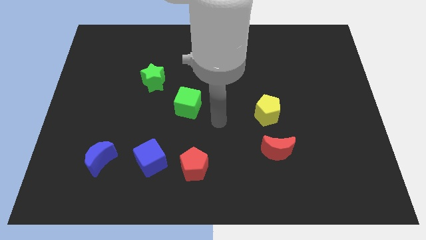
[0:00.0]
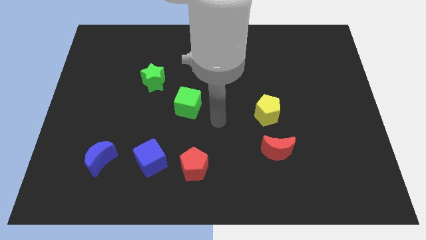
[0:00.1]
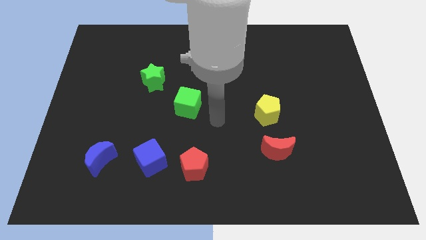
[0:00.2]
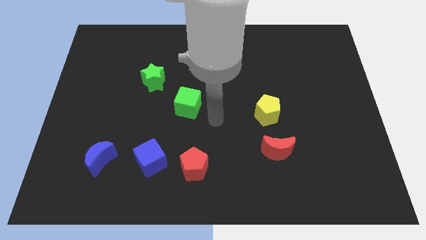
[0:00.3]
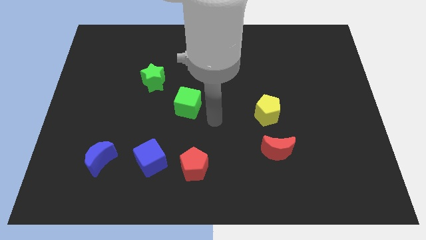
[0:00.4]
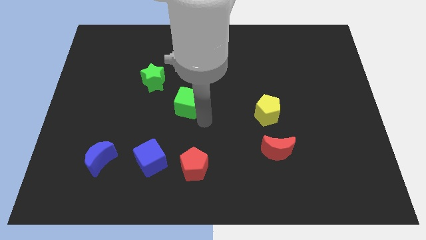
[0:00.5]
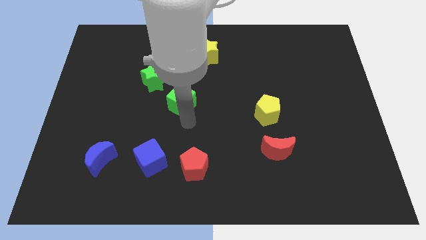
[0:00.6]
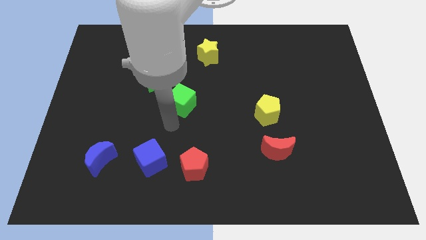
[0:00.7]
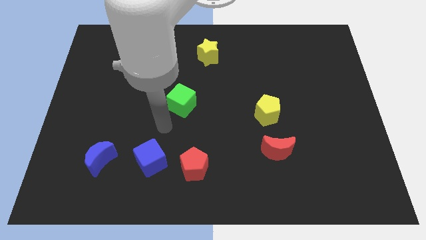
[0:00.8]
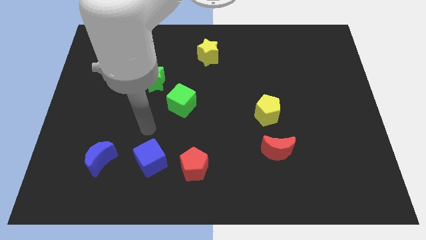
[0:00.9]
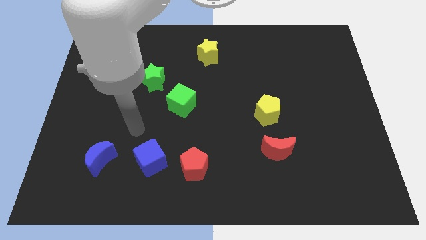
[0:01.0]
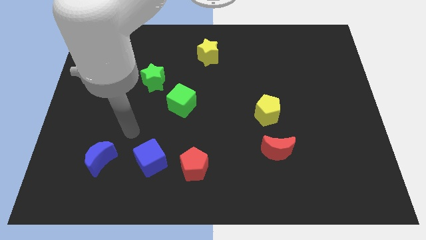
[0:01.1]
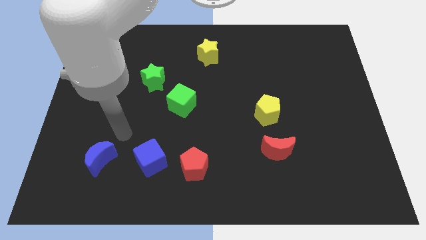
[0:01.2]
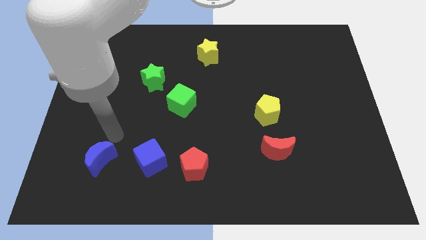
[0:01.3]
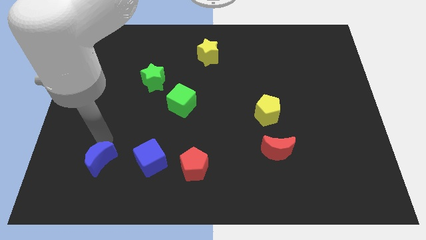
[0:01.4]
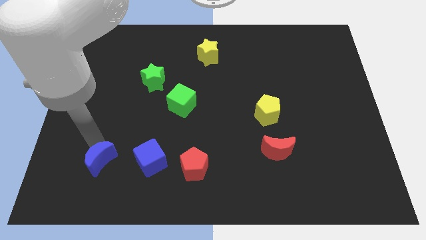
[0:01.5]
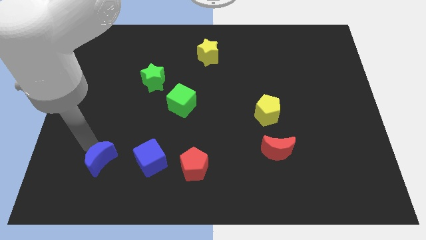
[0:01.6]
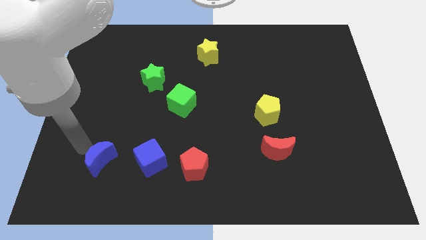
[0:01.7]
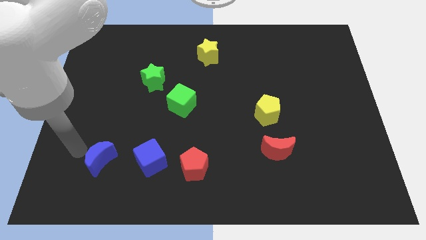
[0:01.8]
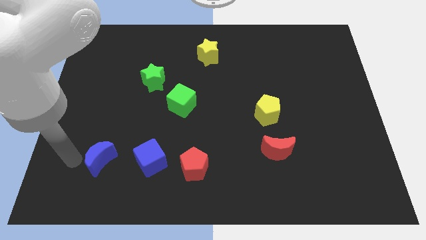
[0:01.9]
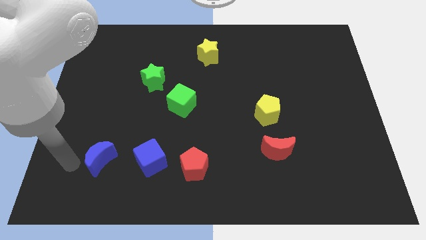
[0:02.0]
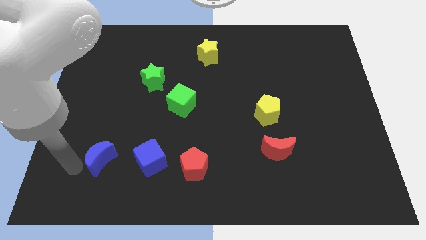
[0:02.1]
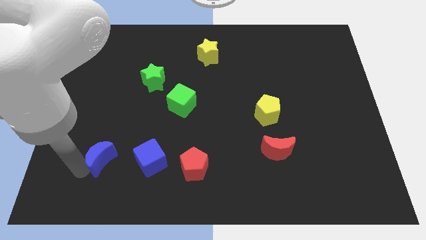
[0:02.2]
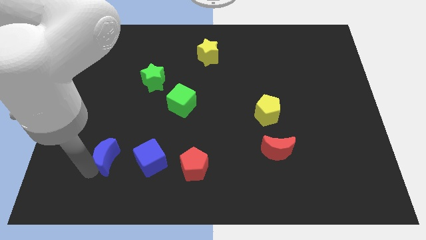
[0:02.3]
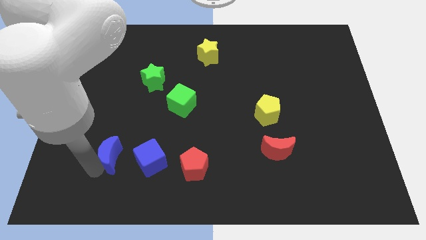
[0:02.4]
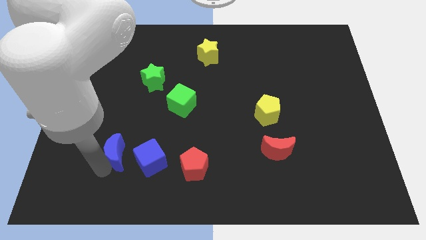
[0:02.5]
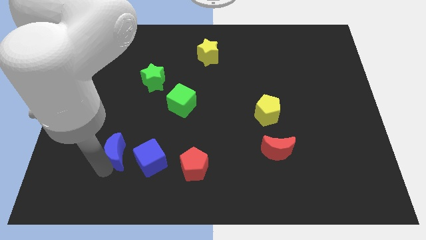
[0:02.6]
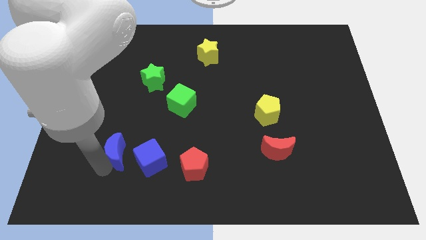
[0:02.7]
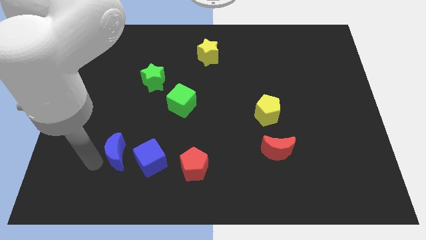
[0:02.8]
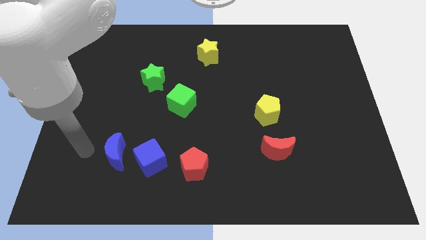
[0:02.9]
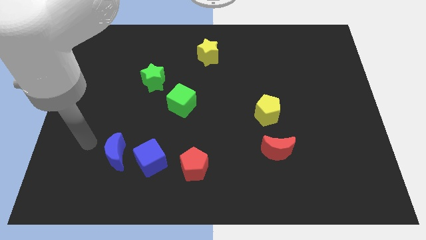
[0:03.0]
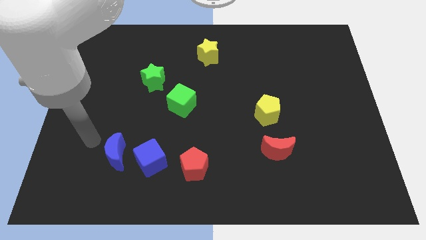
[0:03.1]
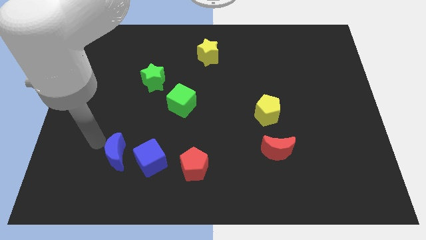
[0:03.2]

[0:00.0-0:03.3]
move the blue crescent towards the blue cube

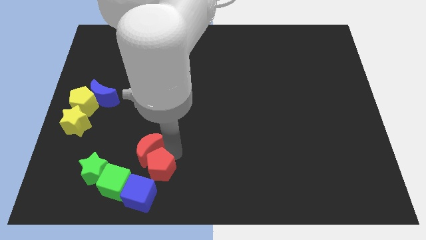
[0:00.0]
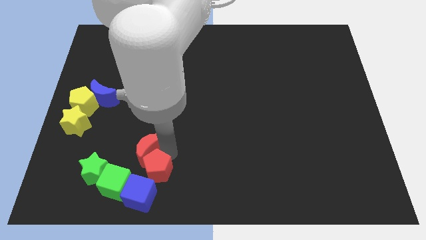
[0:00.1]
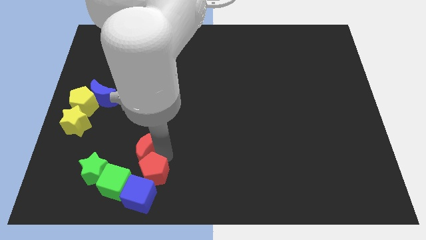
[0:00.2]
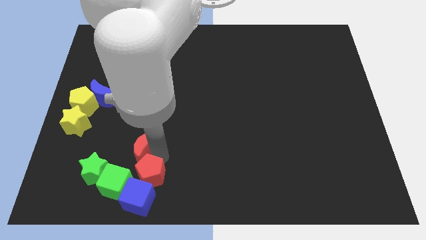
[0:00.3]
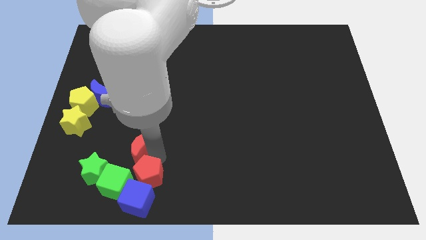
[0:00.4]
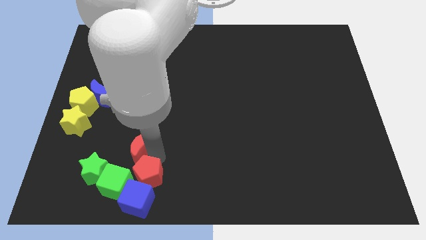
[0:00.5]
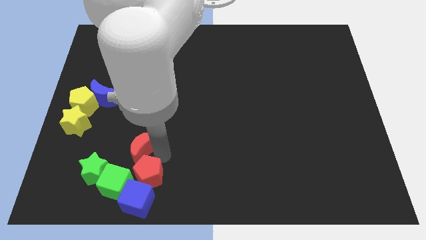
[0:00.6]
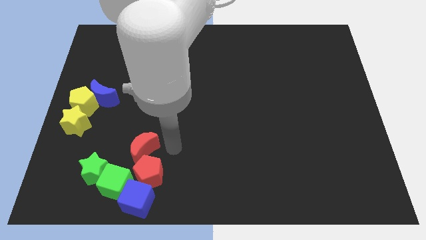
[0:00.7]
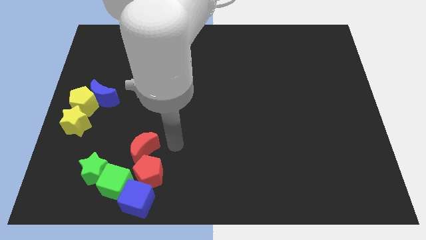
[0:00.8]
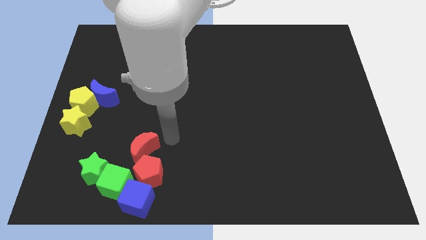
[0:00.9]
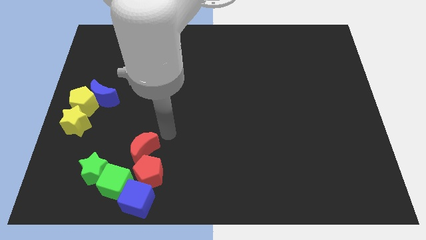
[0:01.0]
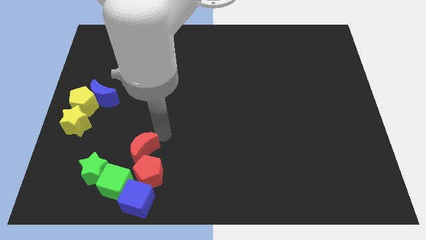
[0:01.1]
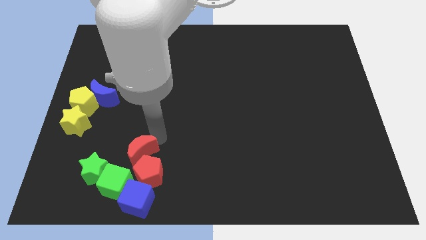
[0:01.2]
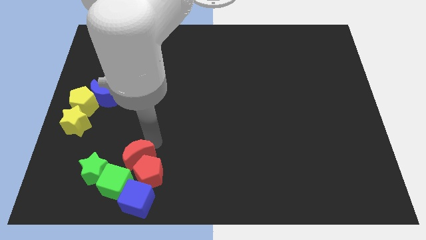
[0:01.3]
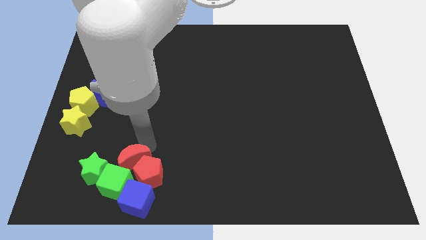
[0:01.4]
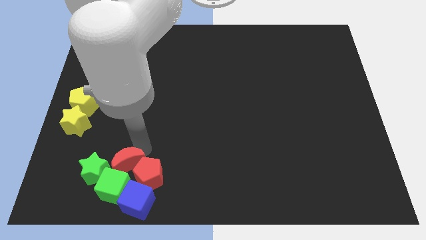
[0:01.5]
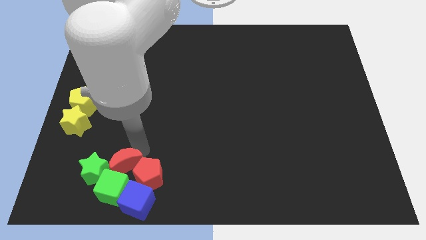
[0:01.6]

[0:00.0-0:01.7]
push the red pentagon and red moon into the group of blocks

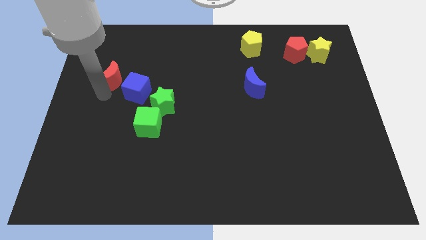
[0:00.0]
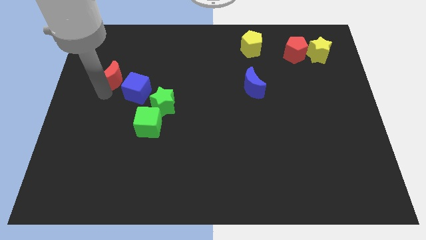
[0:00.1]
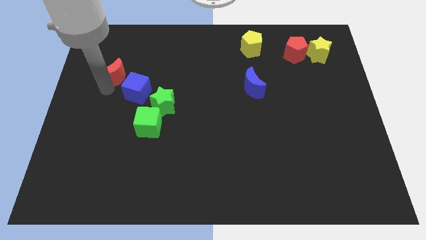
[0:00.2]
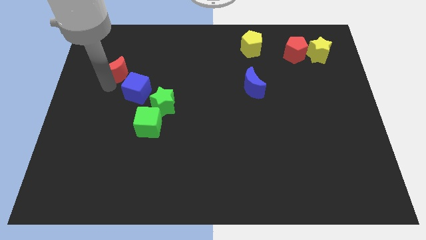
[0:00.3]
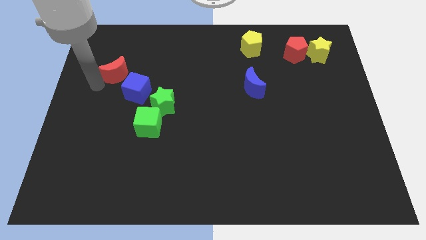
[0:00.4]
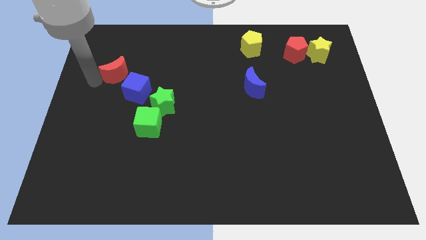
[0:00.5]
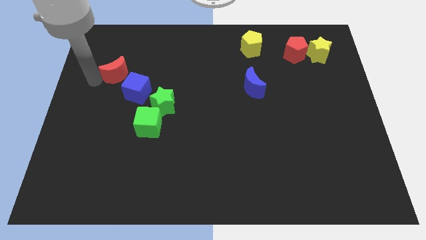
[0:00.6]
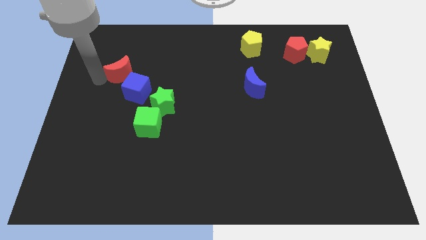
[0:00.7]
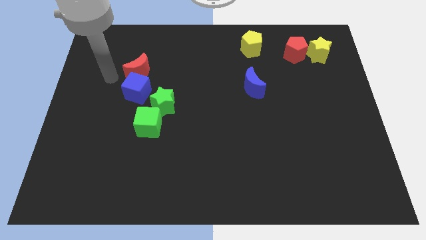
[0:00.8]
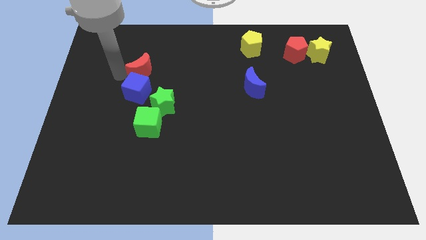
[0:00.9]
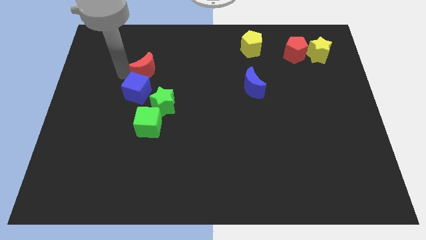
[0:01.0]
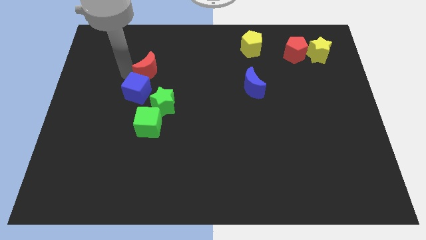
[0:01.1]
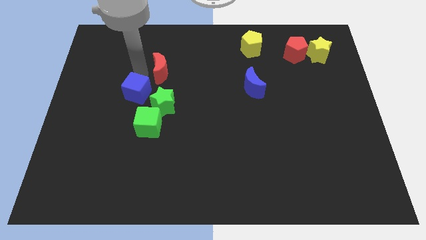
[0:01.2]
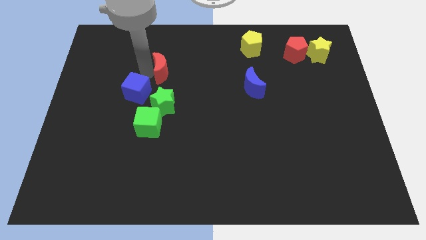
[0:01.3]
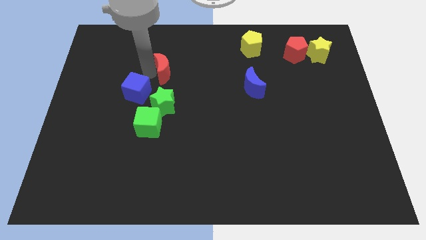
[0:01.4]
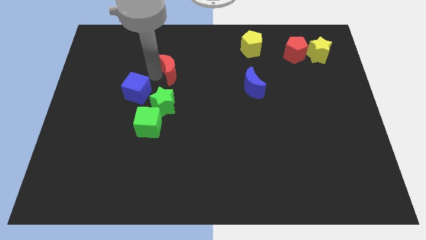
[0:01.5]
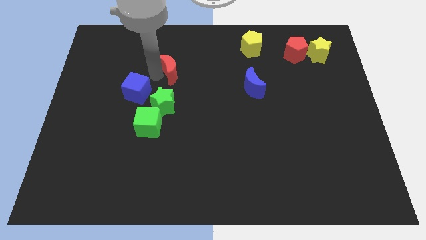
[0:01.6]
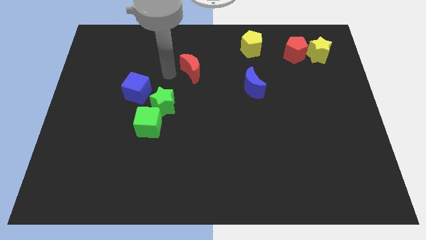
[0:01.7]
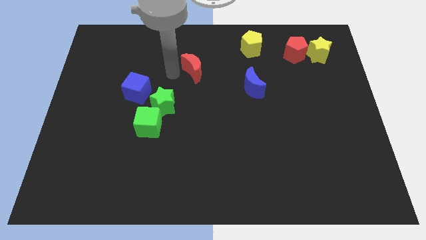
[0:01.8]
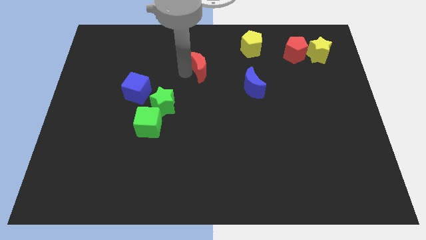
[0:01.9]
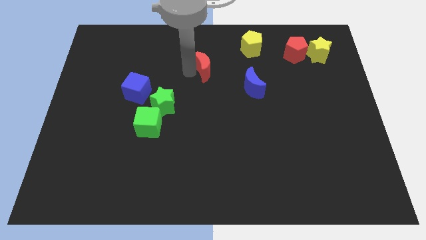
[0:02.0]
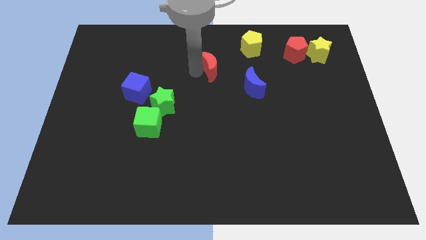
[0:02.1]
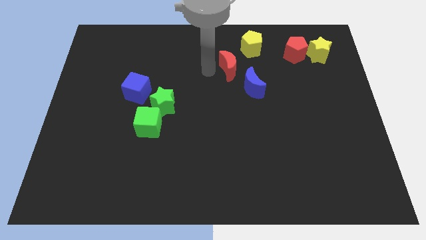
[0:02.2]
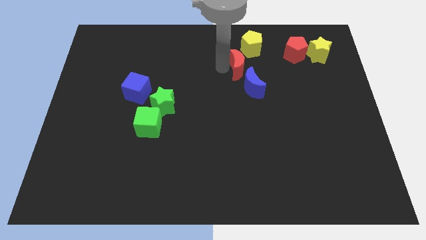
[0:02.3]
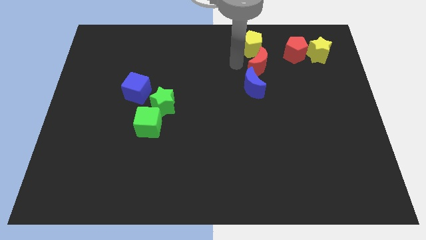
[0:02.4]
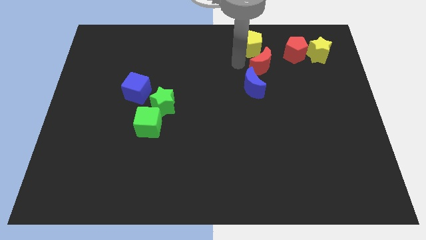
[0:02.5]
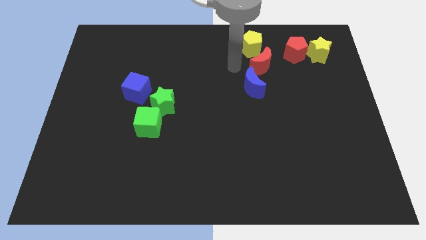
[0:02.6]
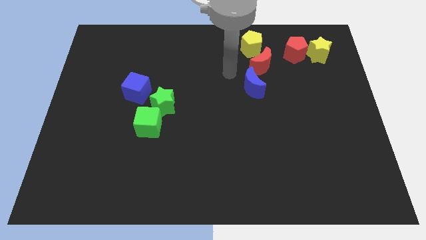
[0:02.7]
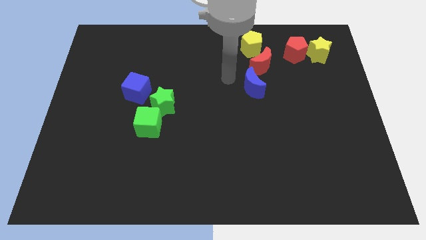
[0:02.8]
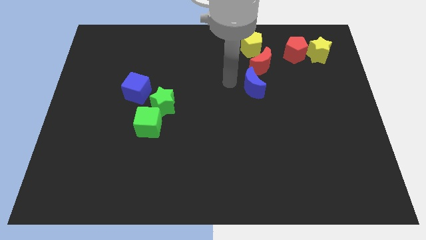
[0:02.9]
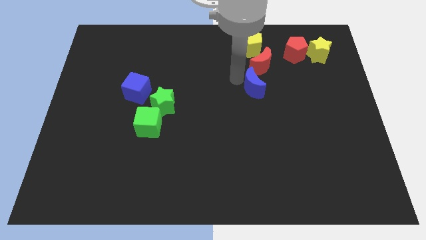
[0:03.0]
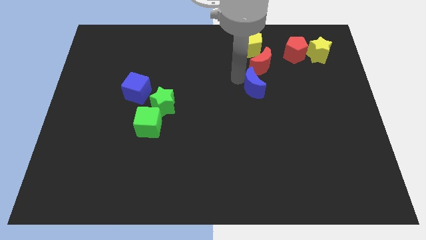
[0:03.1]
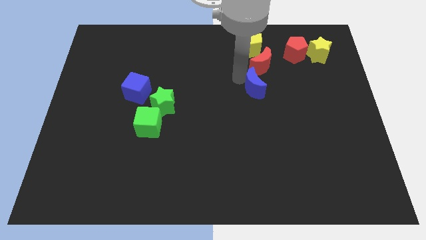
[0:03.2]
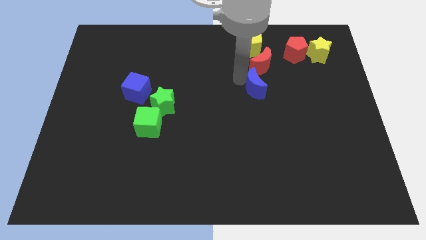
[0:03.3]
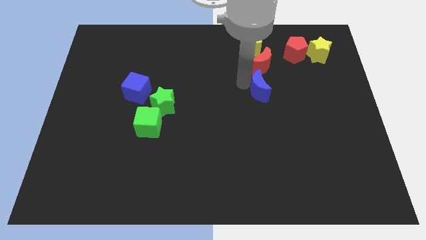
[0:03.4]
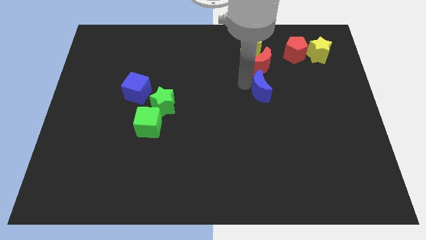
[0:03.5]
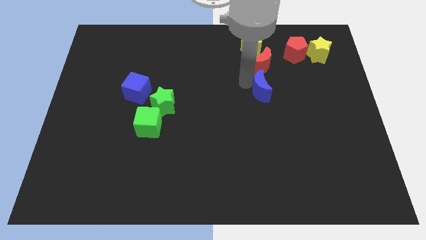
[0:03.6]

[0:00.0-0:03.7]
place red moon in between blue moon and yellow pentagon

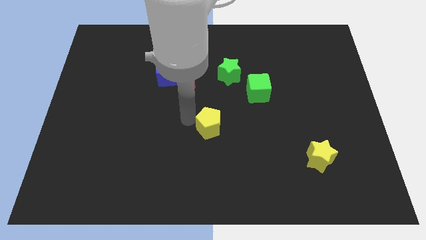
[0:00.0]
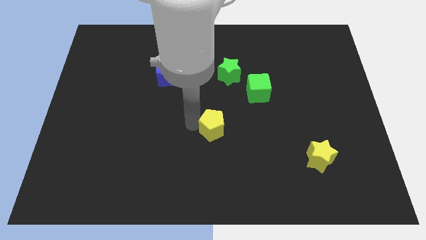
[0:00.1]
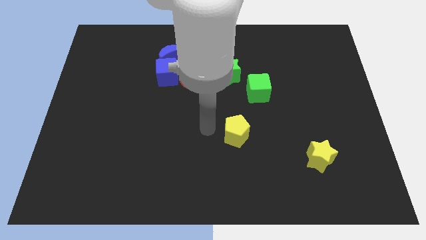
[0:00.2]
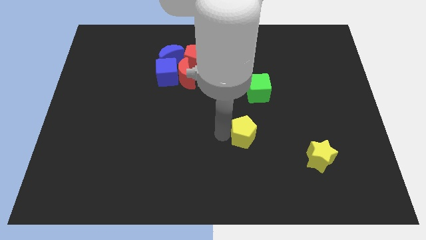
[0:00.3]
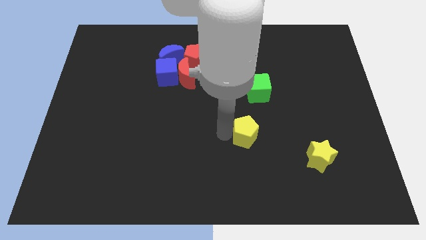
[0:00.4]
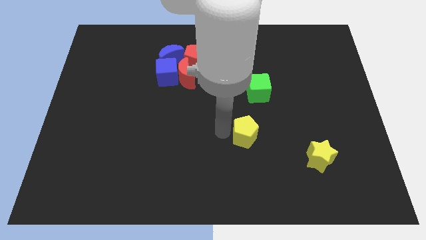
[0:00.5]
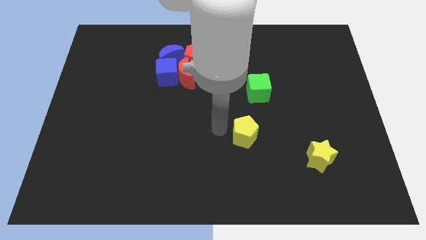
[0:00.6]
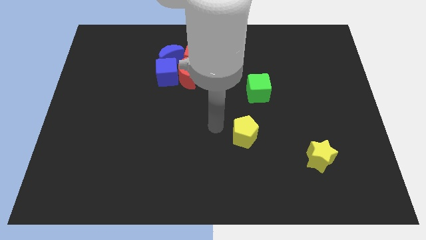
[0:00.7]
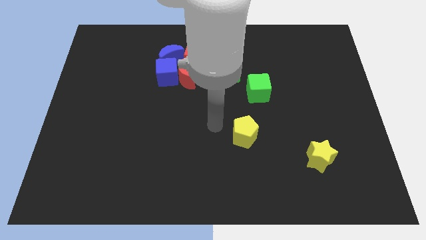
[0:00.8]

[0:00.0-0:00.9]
push the yellow pentagon diagonally top left to the yellow star
